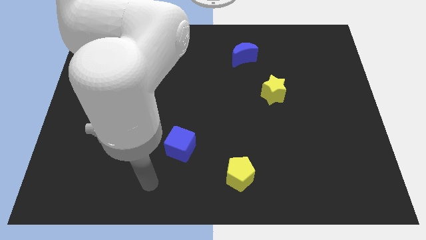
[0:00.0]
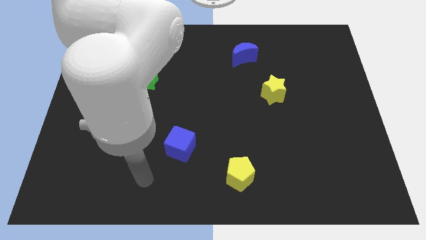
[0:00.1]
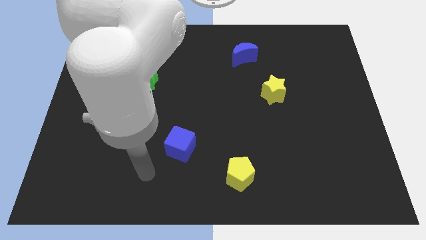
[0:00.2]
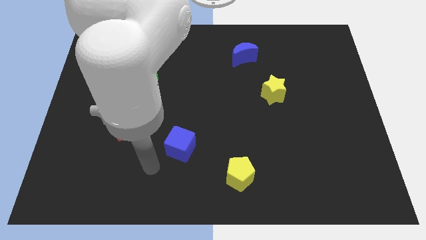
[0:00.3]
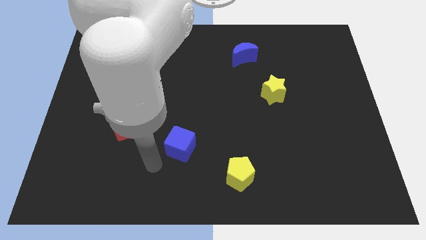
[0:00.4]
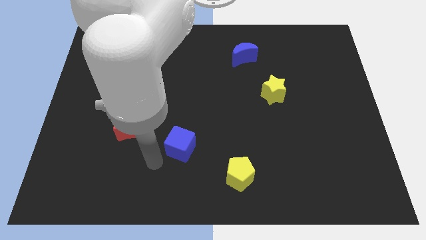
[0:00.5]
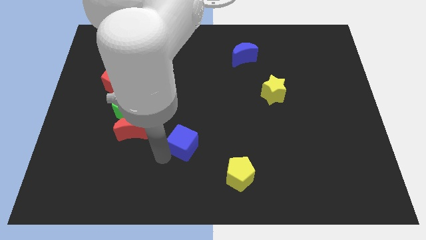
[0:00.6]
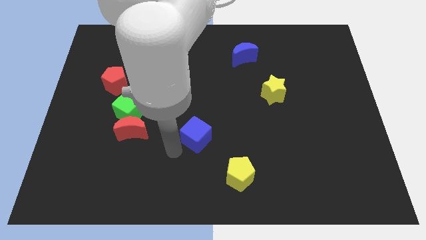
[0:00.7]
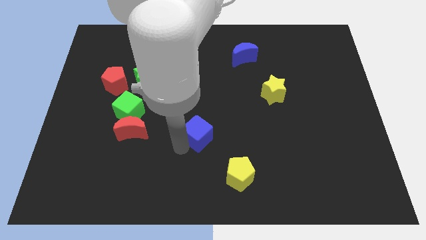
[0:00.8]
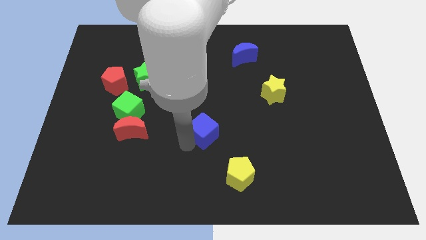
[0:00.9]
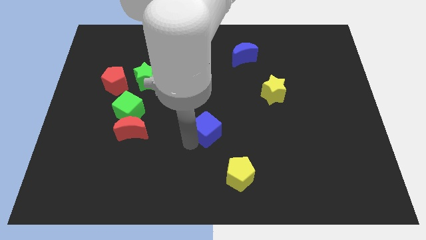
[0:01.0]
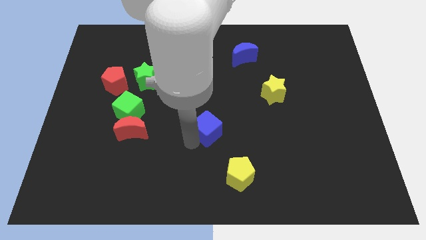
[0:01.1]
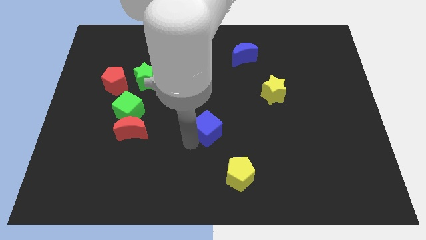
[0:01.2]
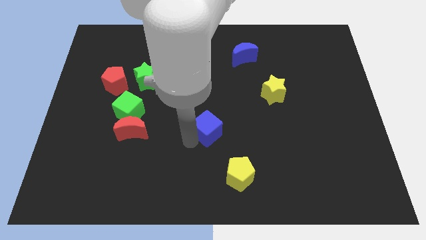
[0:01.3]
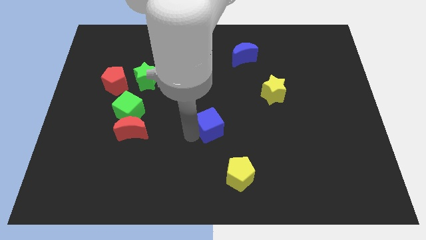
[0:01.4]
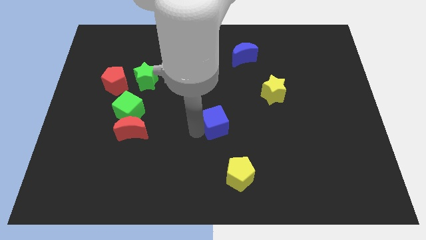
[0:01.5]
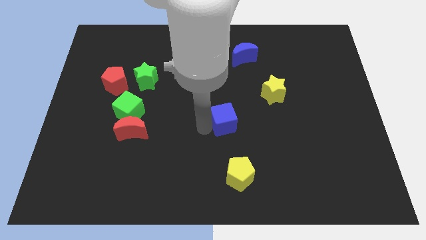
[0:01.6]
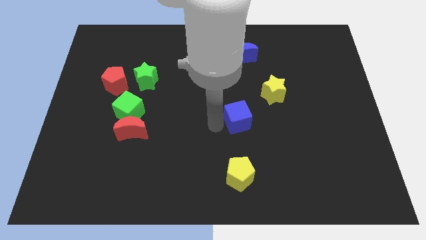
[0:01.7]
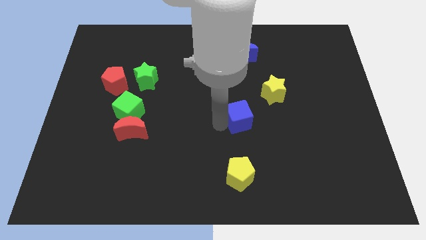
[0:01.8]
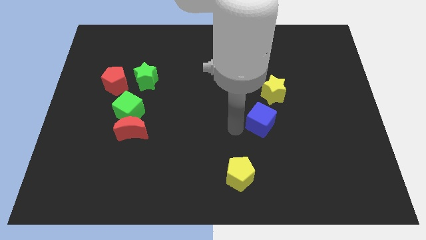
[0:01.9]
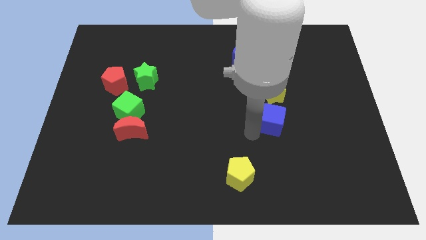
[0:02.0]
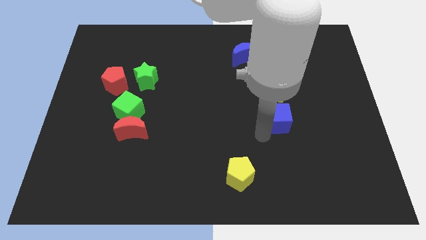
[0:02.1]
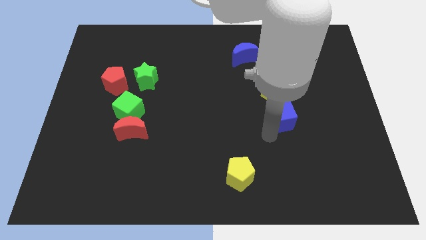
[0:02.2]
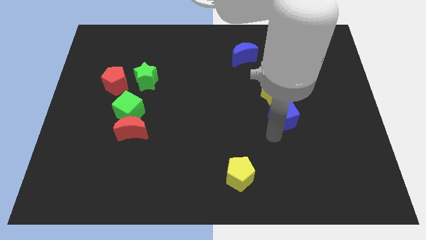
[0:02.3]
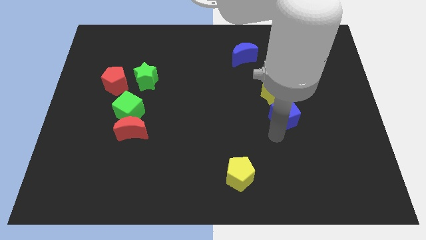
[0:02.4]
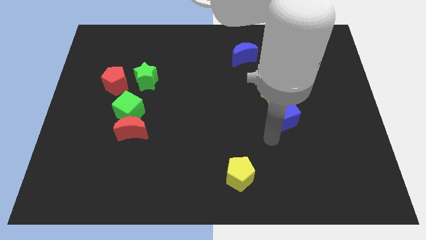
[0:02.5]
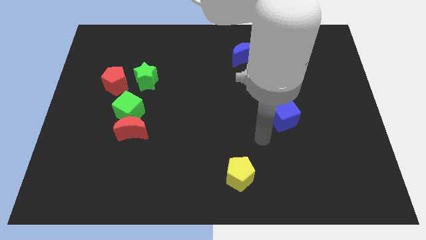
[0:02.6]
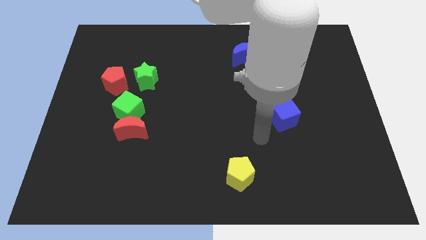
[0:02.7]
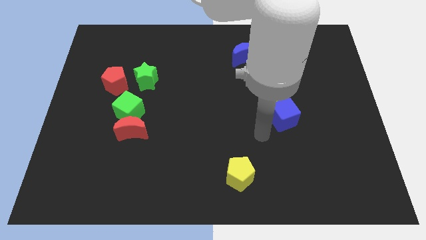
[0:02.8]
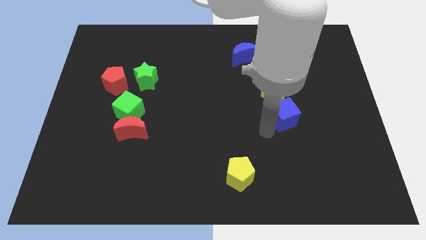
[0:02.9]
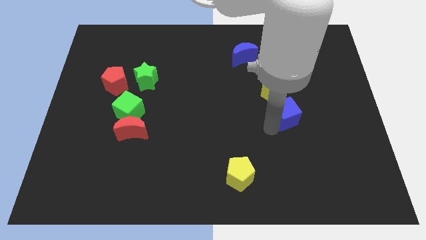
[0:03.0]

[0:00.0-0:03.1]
move the blue cube towards the top right

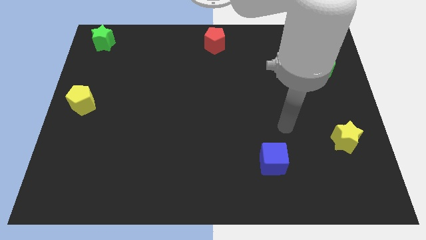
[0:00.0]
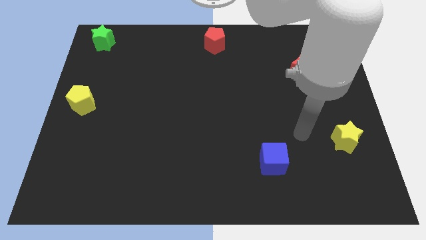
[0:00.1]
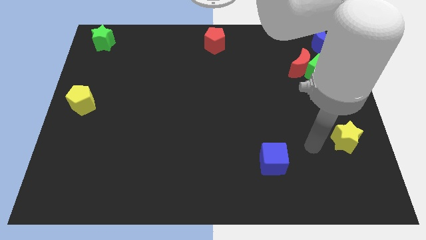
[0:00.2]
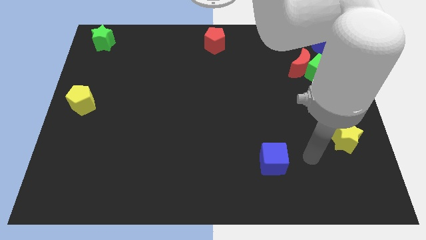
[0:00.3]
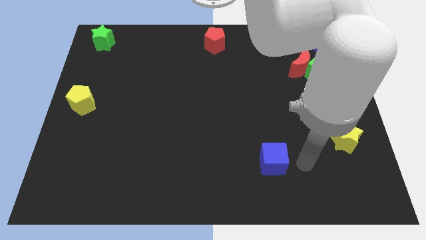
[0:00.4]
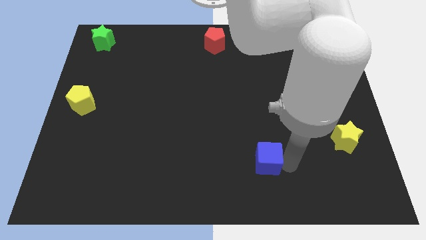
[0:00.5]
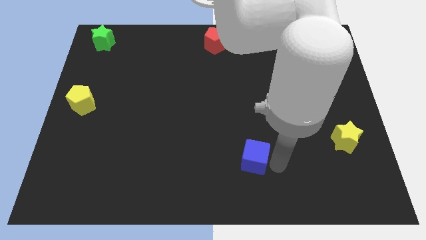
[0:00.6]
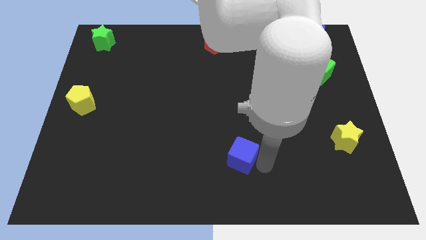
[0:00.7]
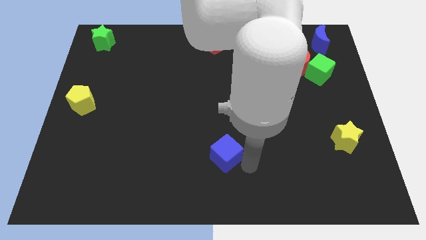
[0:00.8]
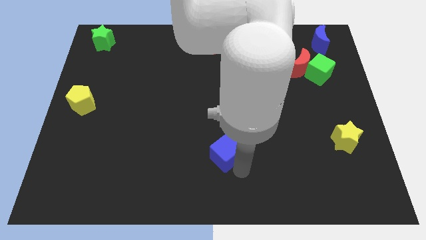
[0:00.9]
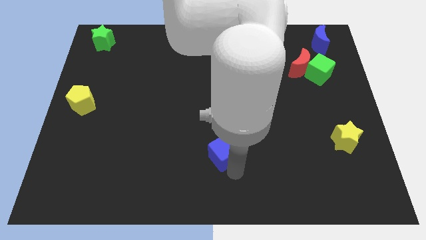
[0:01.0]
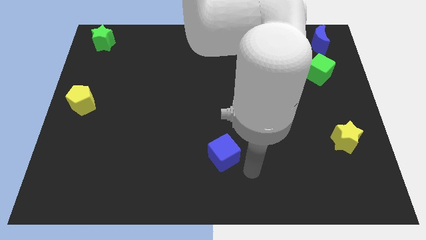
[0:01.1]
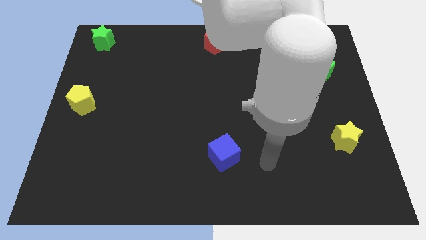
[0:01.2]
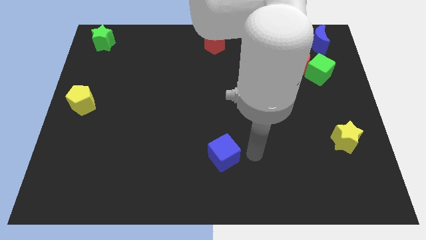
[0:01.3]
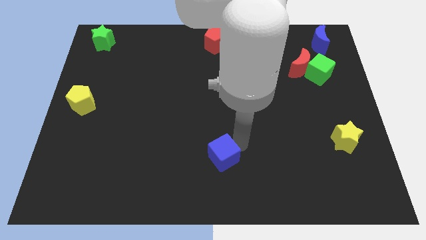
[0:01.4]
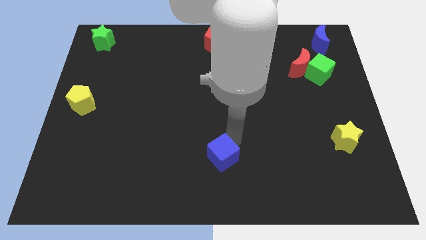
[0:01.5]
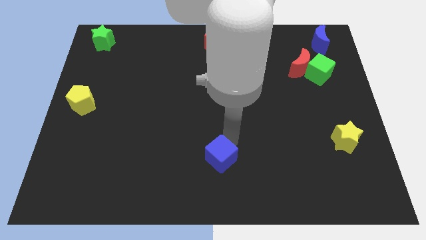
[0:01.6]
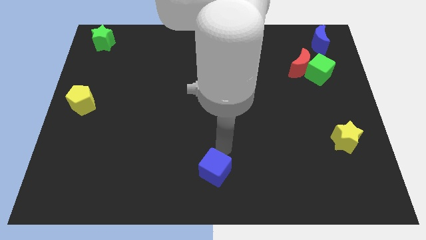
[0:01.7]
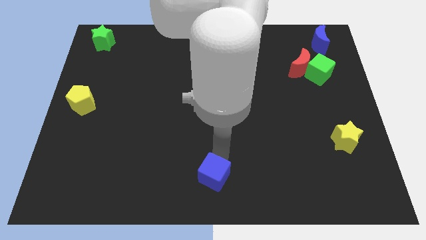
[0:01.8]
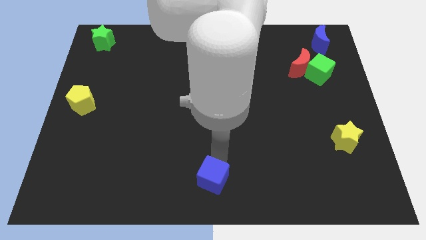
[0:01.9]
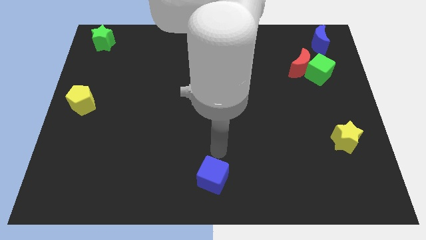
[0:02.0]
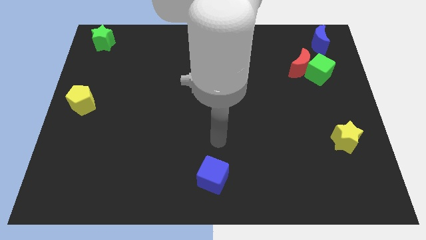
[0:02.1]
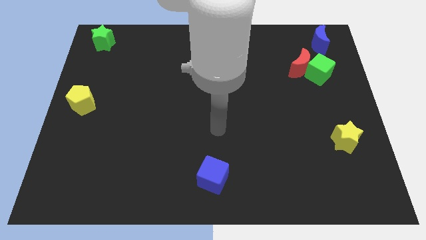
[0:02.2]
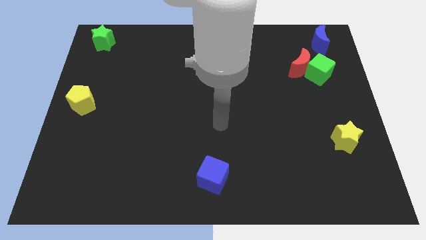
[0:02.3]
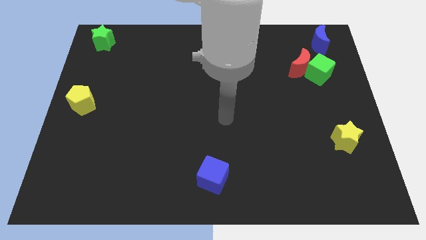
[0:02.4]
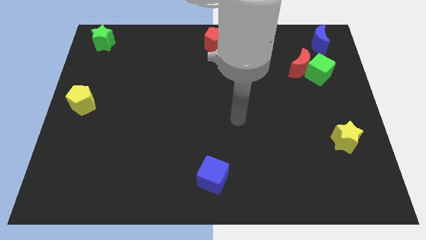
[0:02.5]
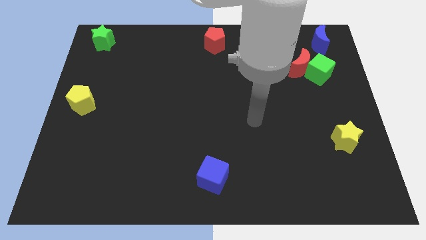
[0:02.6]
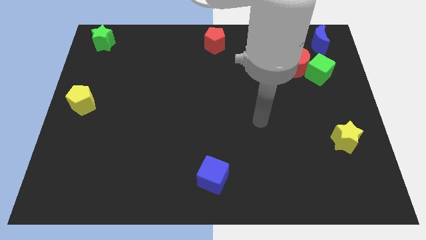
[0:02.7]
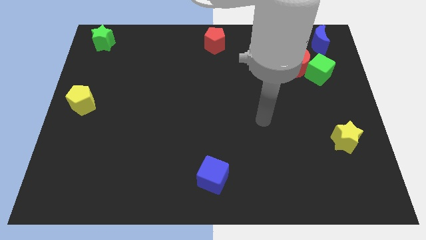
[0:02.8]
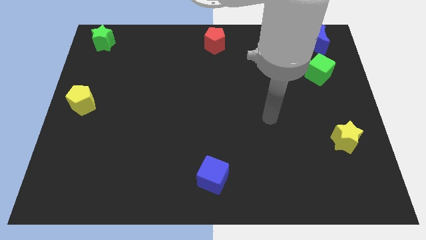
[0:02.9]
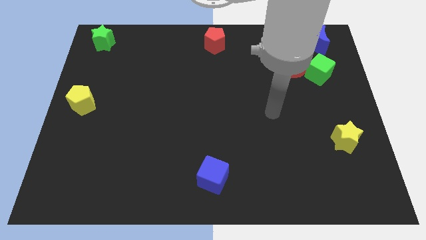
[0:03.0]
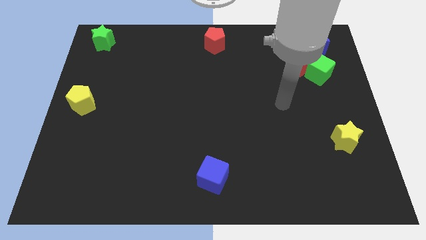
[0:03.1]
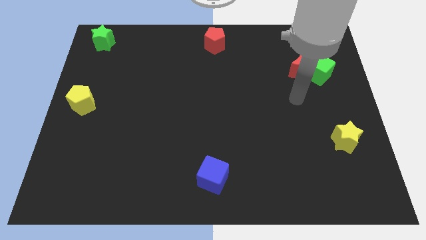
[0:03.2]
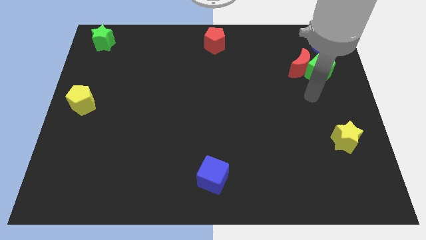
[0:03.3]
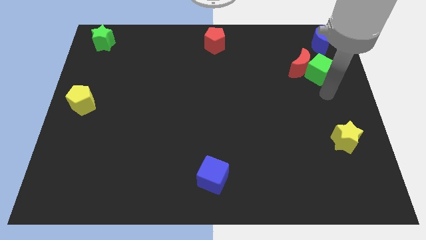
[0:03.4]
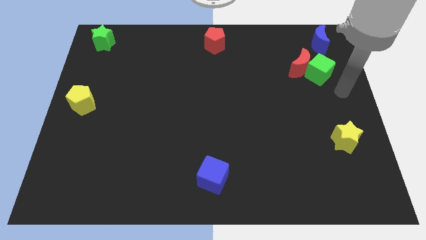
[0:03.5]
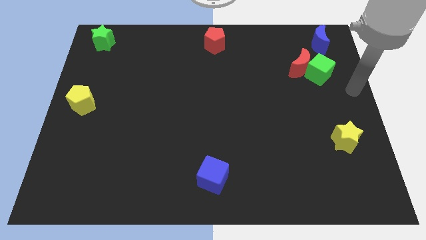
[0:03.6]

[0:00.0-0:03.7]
slide the blue cube to the bottom center of the board

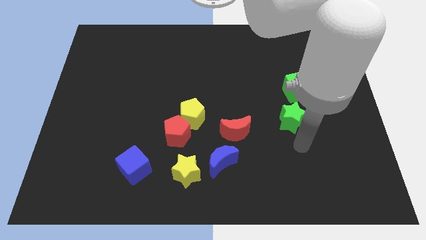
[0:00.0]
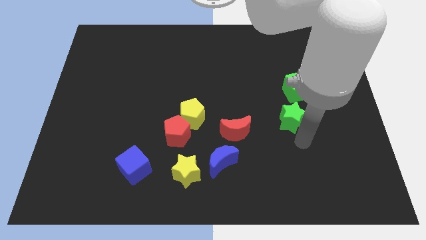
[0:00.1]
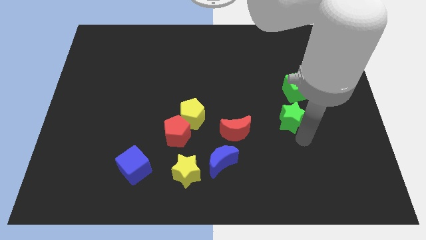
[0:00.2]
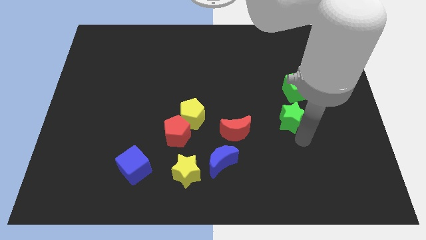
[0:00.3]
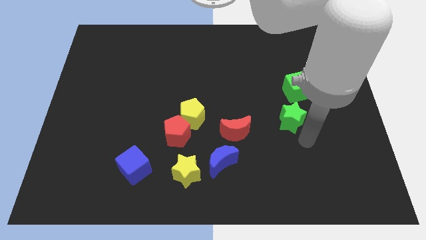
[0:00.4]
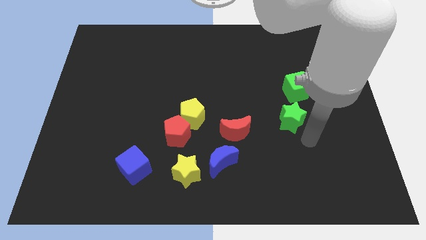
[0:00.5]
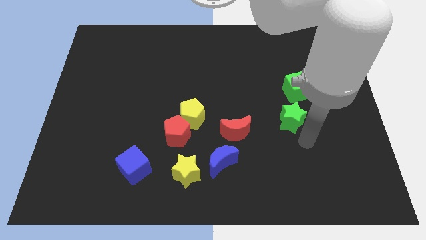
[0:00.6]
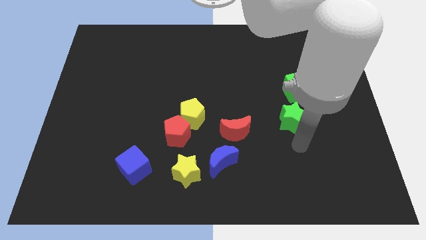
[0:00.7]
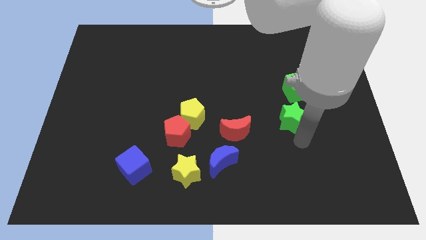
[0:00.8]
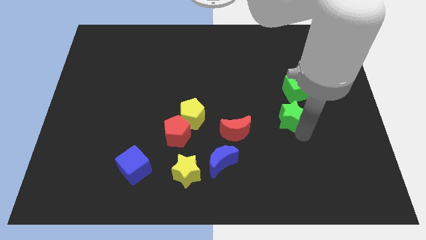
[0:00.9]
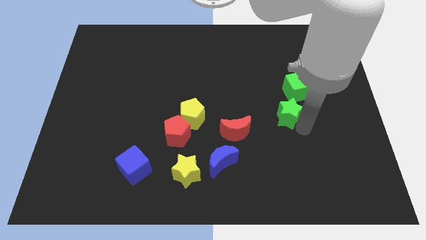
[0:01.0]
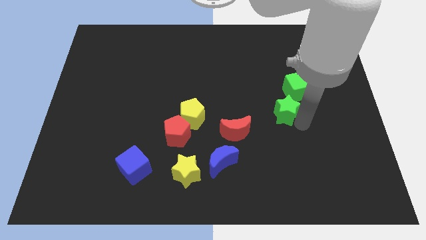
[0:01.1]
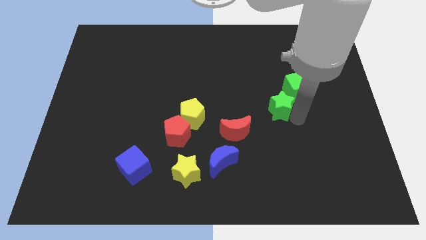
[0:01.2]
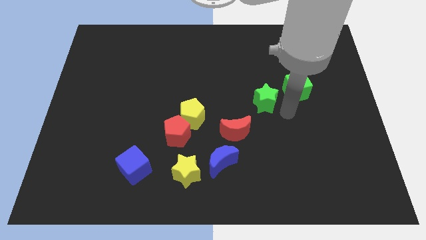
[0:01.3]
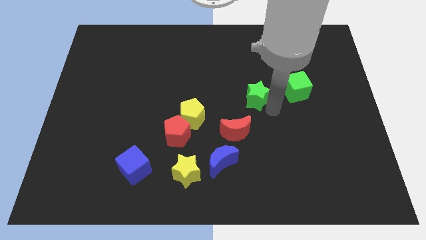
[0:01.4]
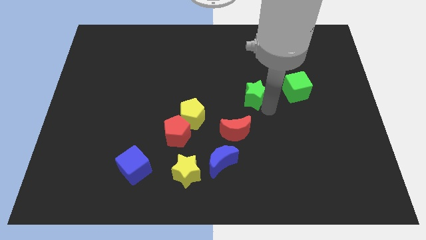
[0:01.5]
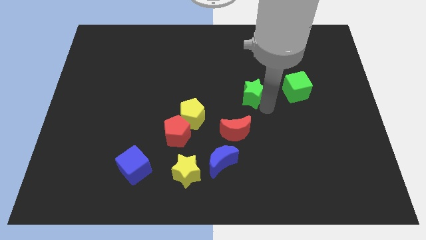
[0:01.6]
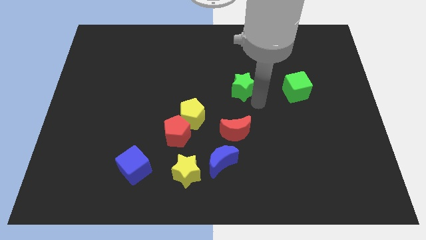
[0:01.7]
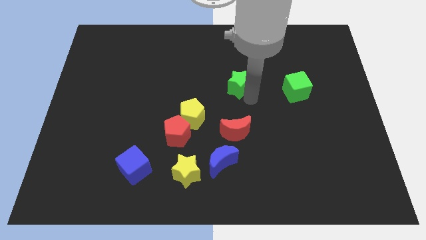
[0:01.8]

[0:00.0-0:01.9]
move the green star to the center

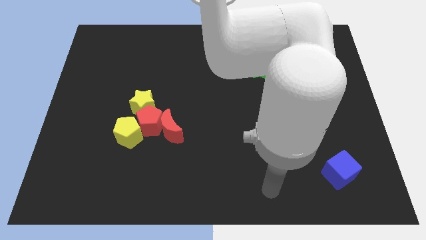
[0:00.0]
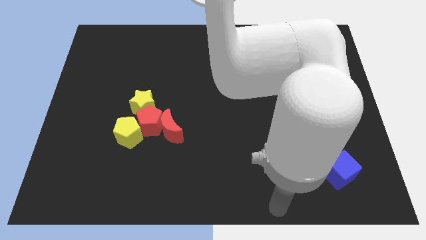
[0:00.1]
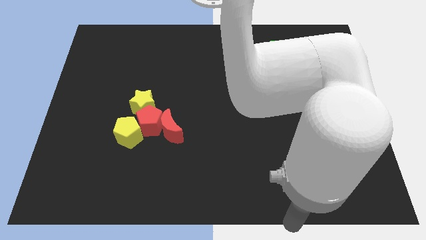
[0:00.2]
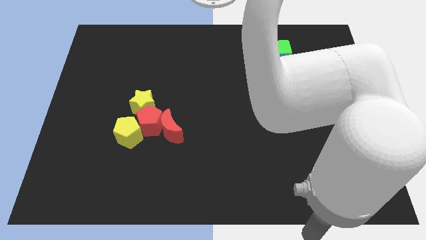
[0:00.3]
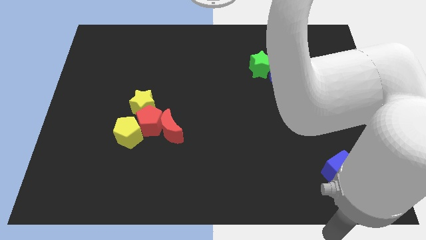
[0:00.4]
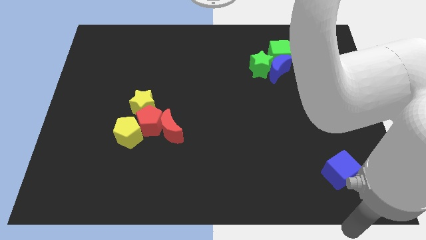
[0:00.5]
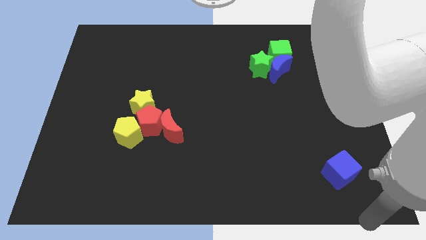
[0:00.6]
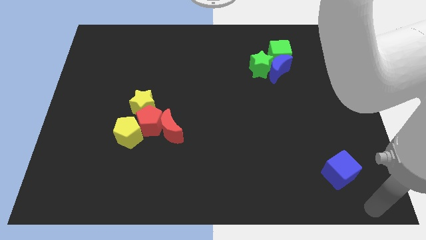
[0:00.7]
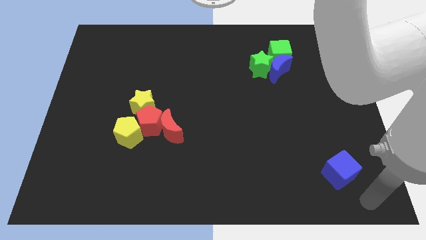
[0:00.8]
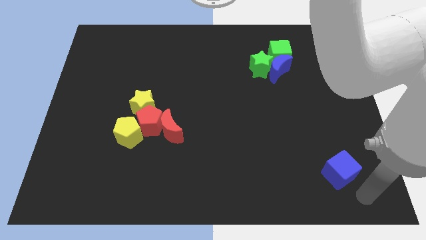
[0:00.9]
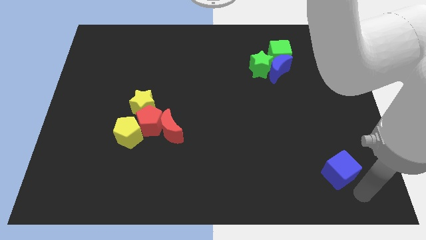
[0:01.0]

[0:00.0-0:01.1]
place your arm to the bottom of blue cube
